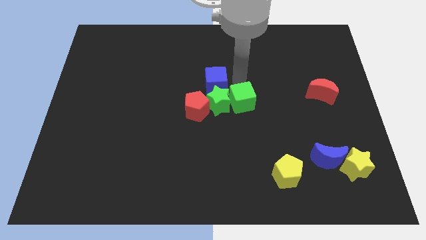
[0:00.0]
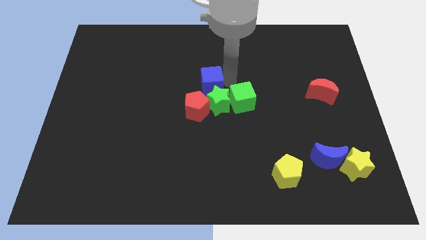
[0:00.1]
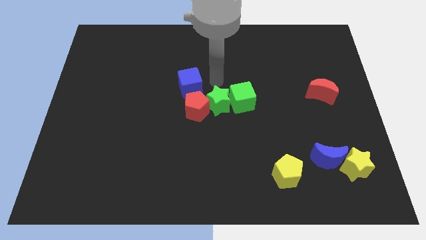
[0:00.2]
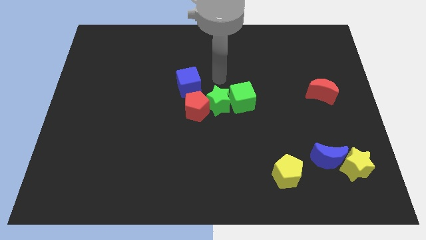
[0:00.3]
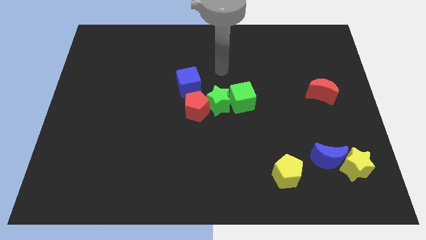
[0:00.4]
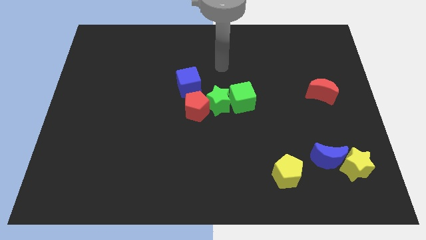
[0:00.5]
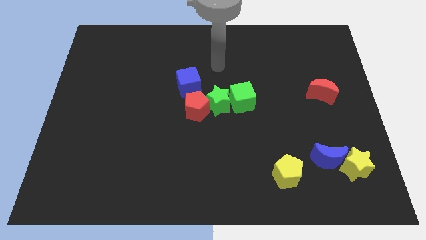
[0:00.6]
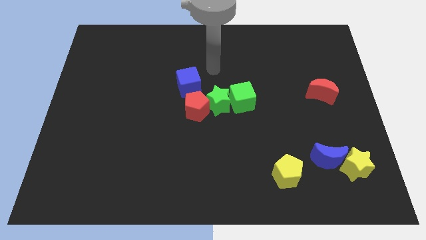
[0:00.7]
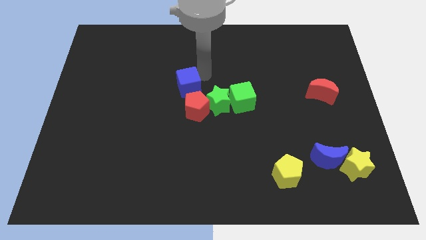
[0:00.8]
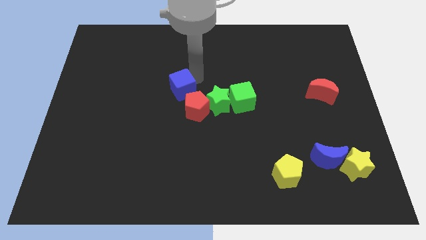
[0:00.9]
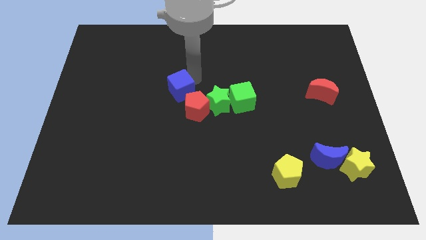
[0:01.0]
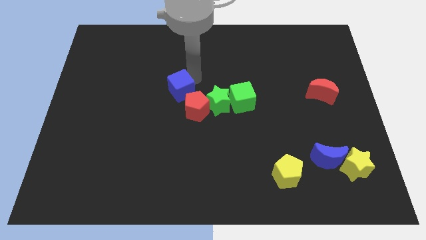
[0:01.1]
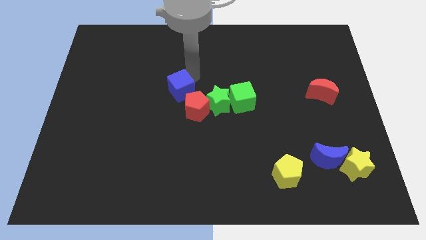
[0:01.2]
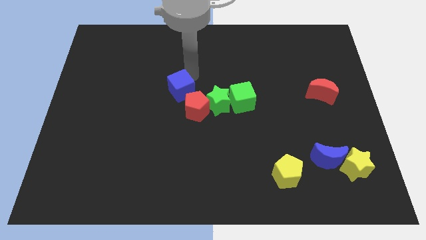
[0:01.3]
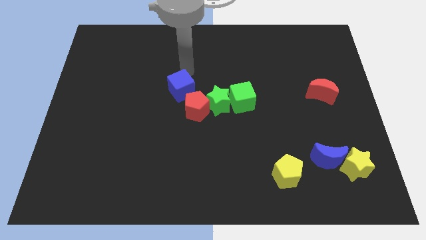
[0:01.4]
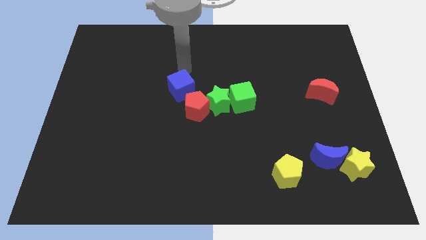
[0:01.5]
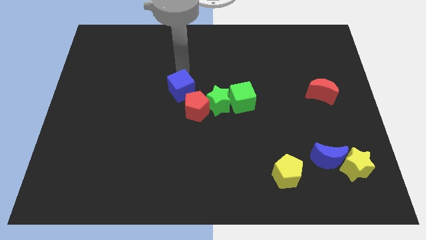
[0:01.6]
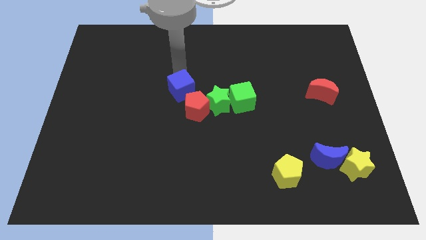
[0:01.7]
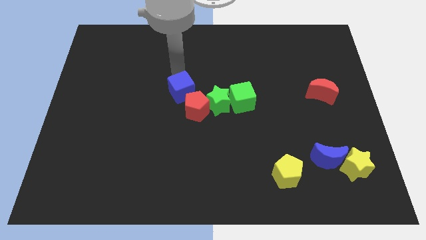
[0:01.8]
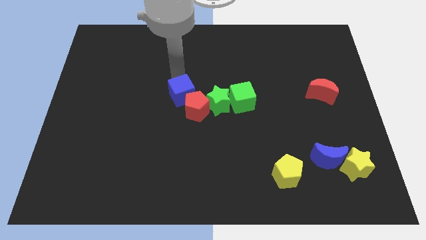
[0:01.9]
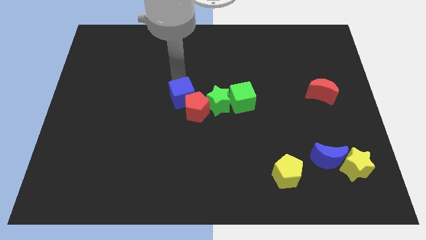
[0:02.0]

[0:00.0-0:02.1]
place the blue cube above the red pentagon

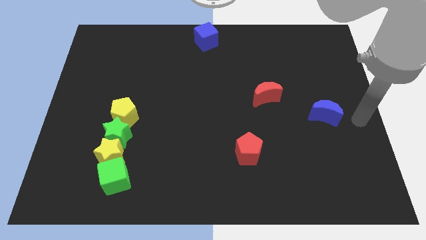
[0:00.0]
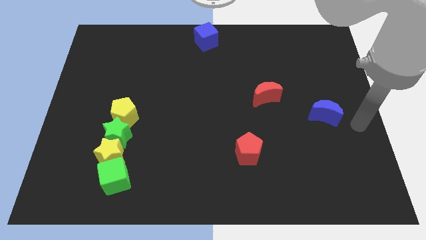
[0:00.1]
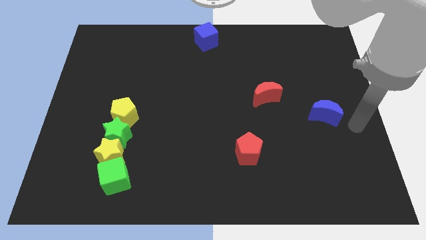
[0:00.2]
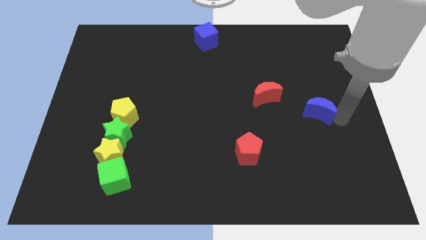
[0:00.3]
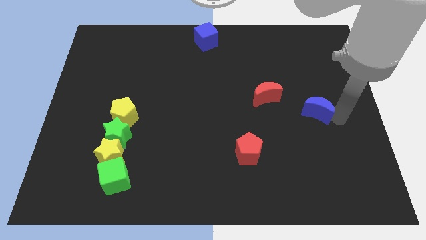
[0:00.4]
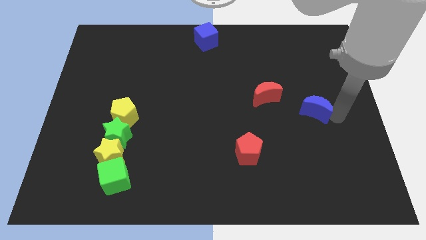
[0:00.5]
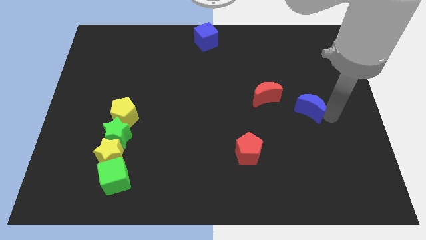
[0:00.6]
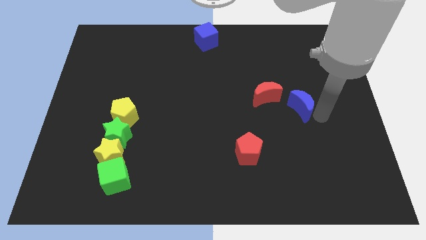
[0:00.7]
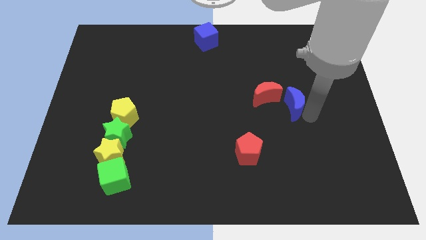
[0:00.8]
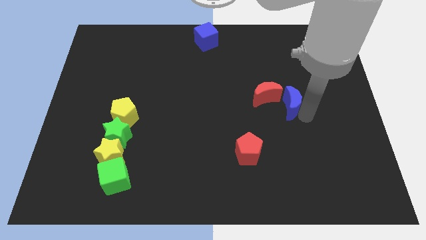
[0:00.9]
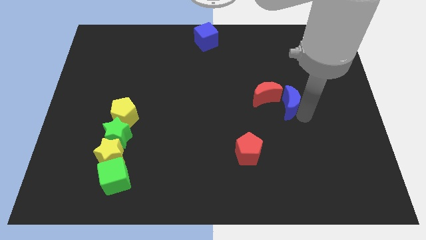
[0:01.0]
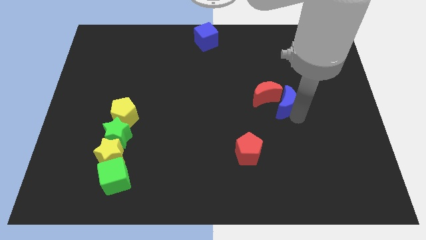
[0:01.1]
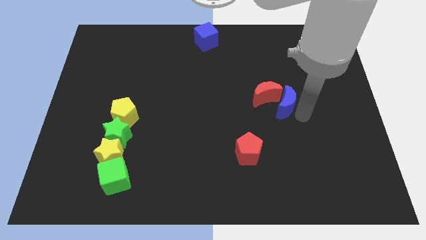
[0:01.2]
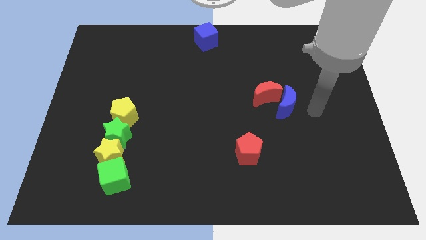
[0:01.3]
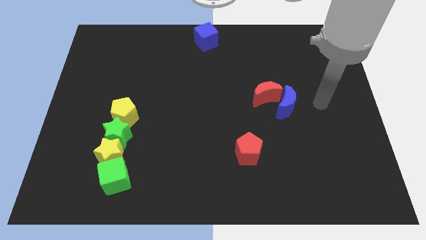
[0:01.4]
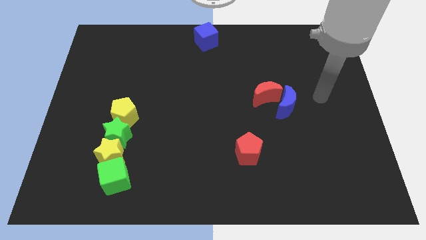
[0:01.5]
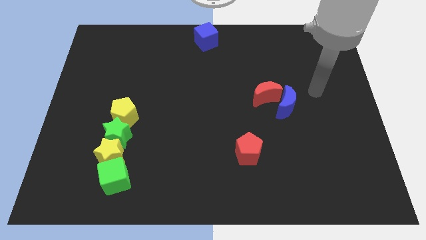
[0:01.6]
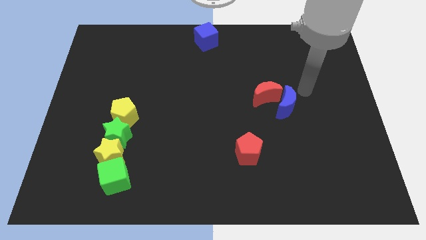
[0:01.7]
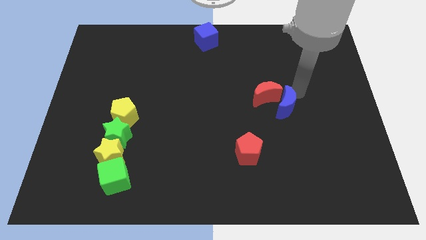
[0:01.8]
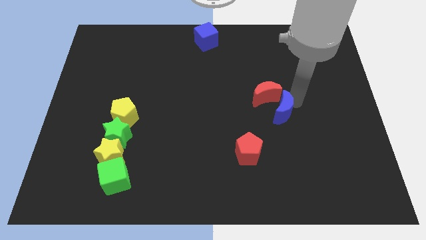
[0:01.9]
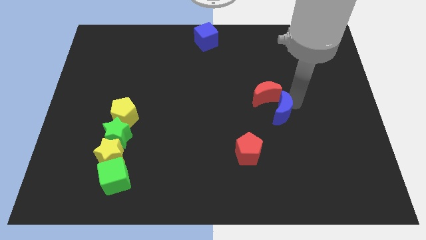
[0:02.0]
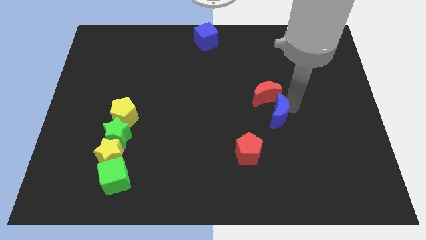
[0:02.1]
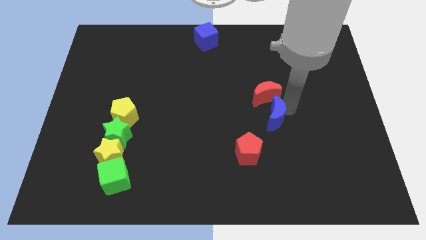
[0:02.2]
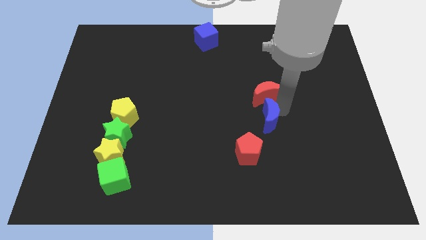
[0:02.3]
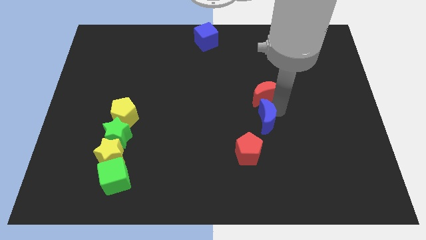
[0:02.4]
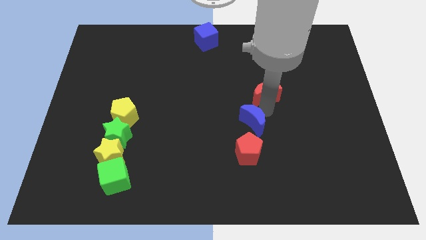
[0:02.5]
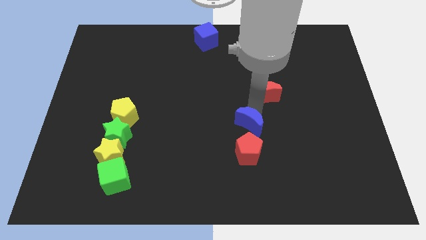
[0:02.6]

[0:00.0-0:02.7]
place the blue moon in between the red moon and red pentagon

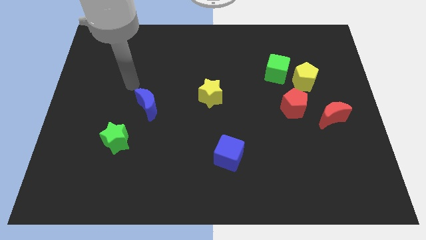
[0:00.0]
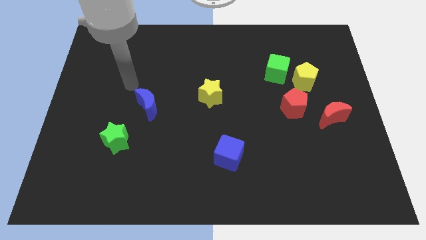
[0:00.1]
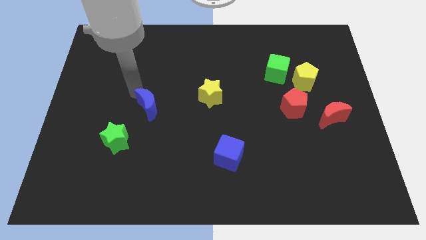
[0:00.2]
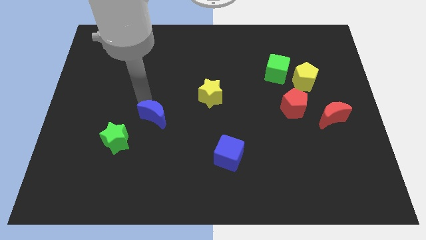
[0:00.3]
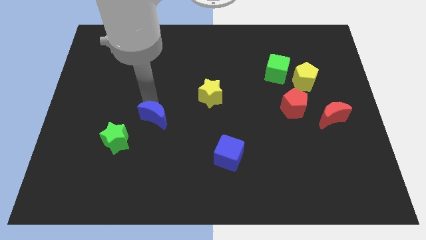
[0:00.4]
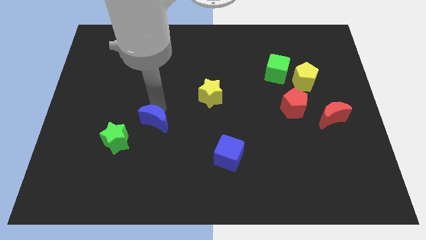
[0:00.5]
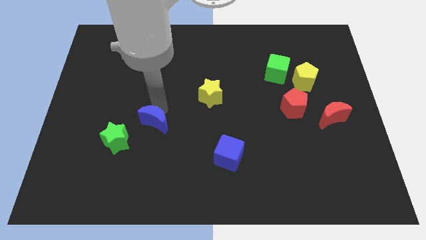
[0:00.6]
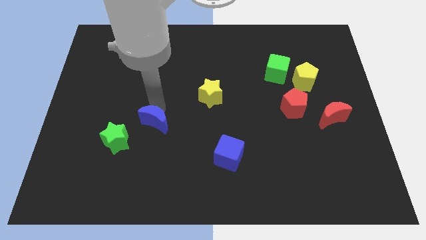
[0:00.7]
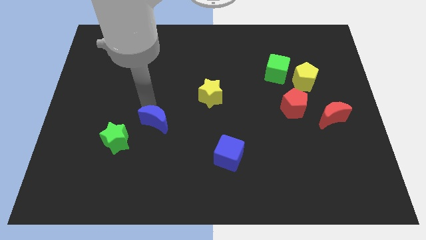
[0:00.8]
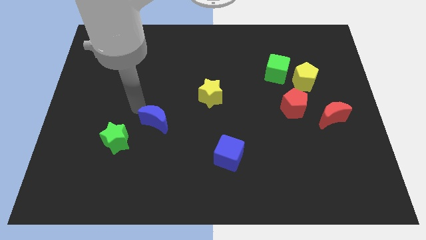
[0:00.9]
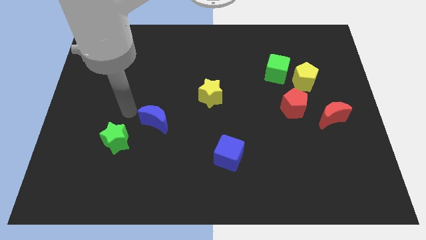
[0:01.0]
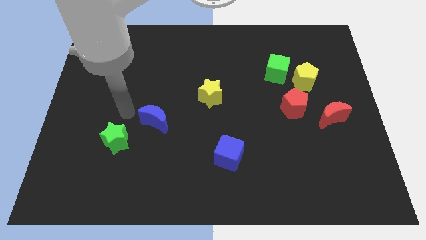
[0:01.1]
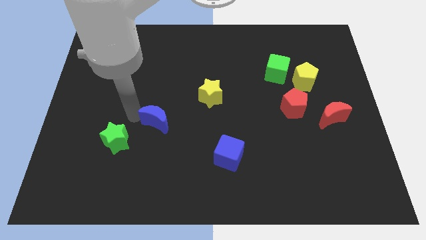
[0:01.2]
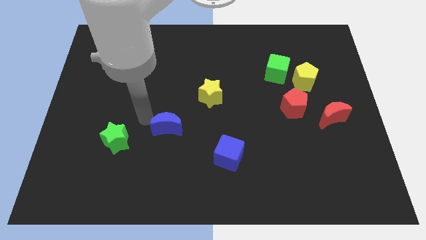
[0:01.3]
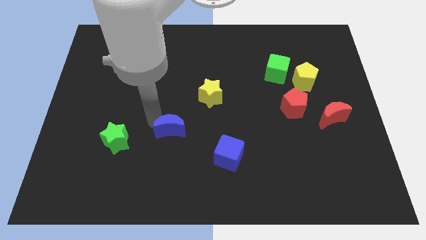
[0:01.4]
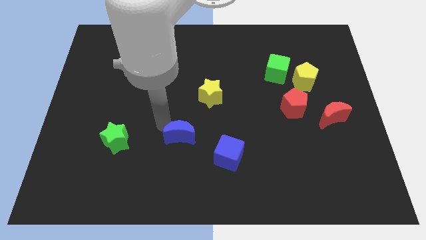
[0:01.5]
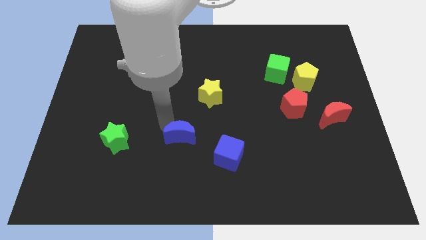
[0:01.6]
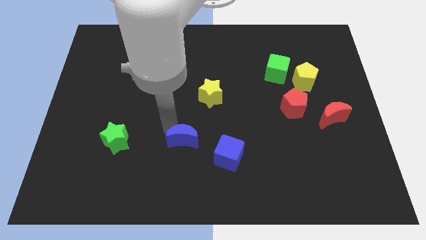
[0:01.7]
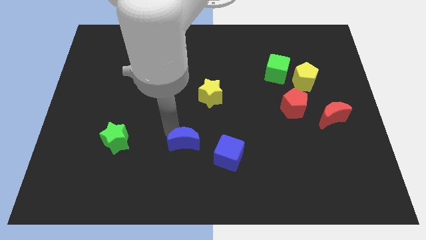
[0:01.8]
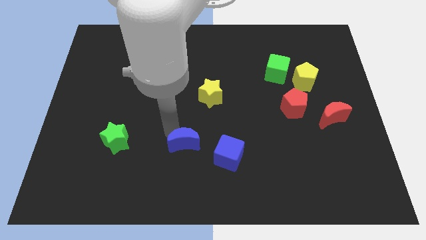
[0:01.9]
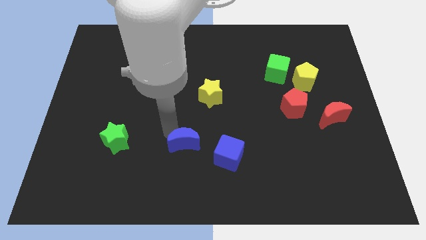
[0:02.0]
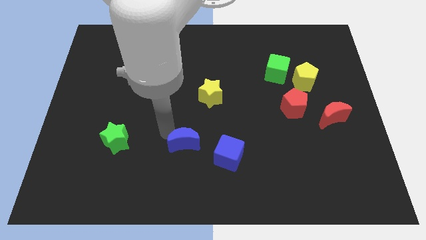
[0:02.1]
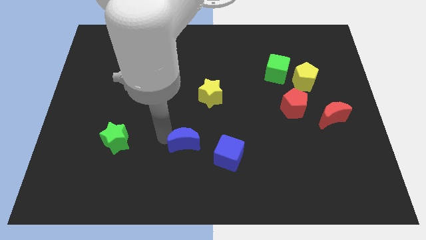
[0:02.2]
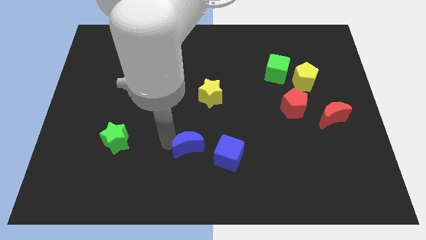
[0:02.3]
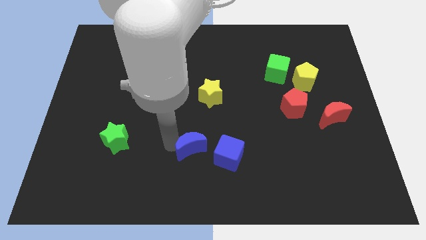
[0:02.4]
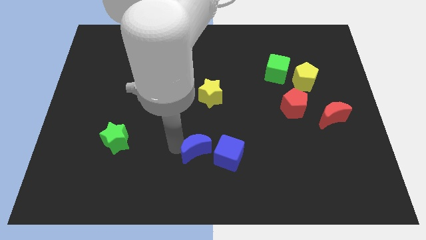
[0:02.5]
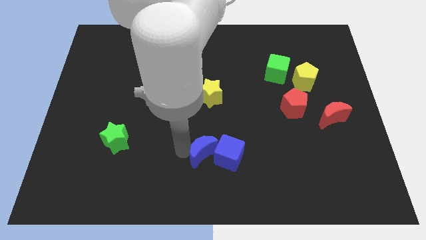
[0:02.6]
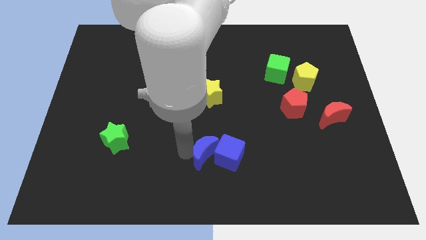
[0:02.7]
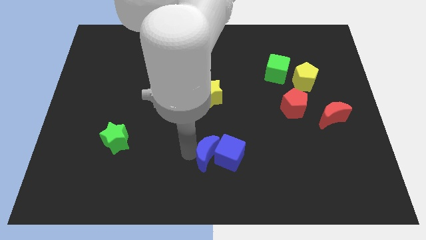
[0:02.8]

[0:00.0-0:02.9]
push the blue crescent into blue cube

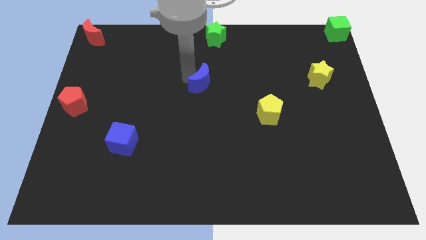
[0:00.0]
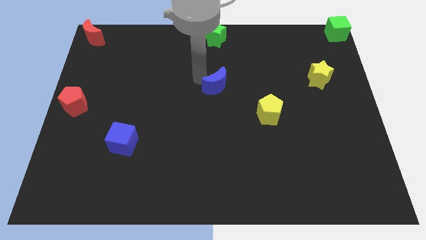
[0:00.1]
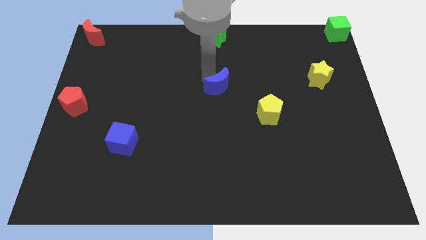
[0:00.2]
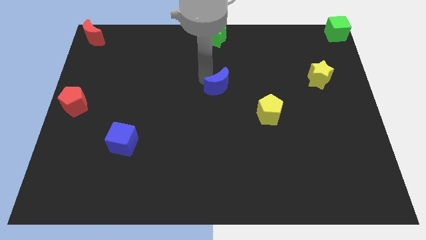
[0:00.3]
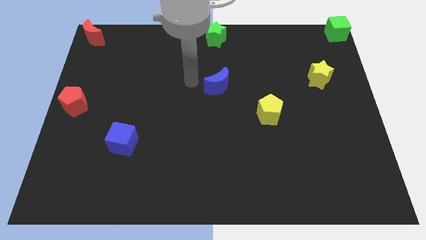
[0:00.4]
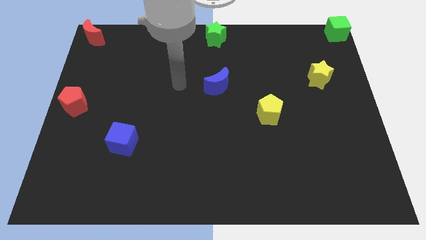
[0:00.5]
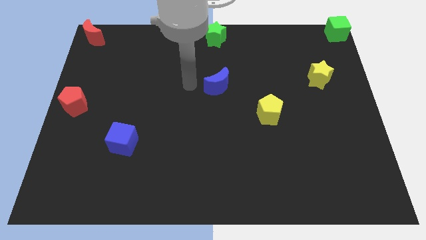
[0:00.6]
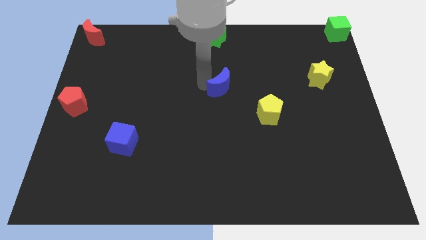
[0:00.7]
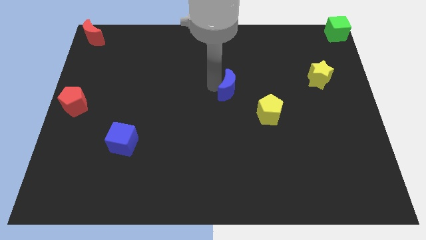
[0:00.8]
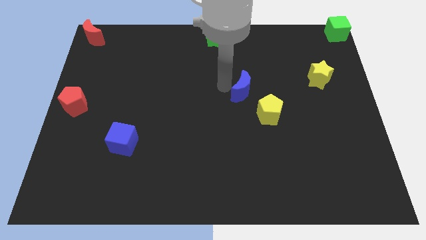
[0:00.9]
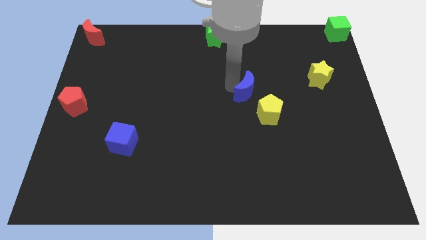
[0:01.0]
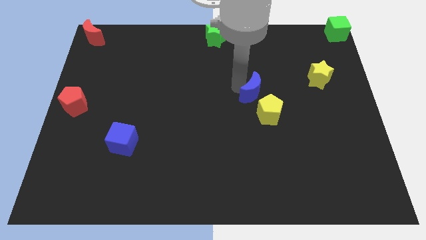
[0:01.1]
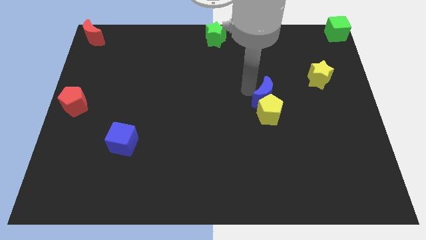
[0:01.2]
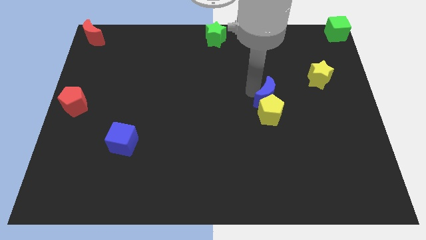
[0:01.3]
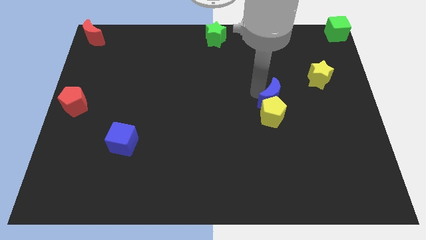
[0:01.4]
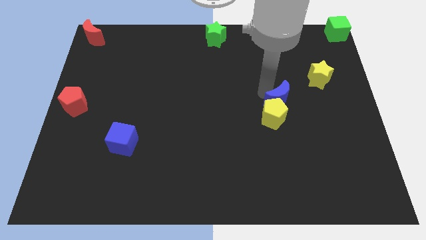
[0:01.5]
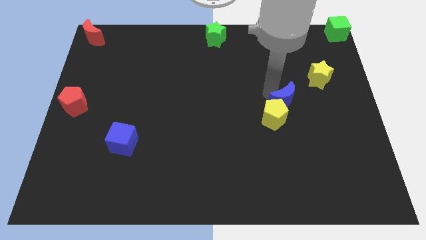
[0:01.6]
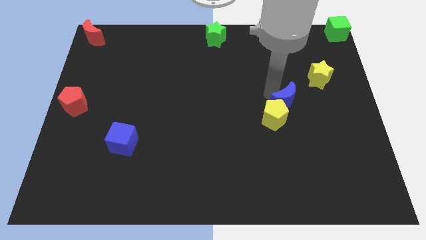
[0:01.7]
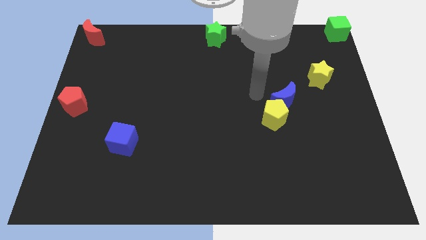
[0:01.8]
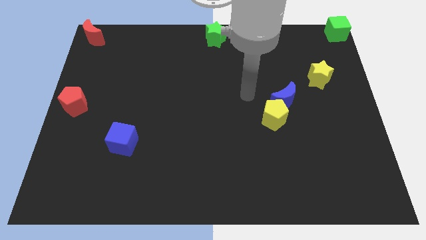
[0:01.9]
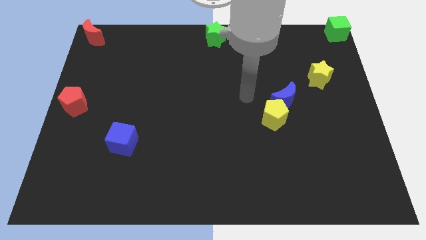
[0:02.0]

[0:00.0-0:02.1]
slide blue crescent into yellow pentagon
